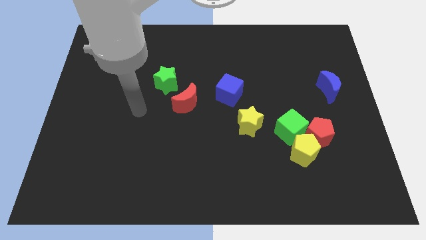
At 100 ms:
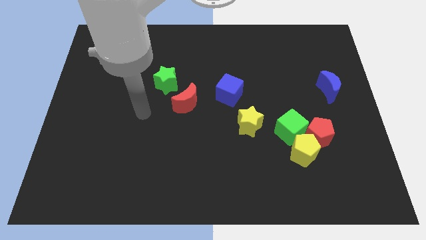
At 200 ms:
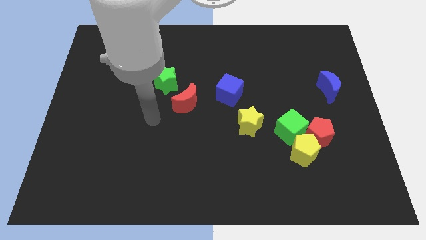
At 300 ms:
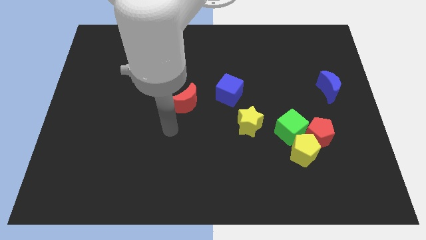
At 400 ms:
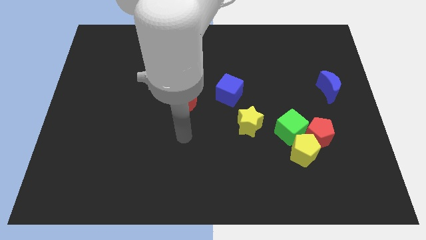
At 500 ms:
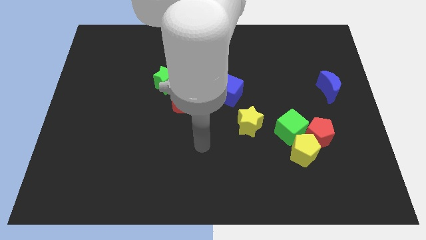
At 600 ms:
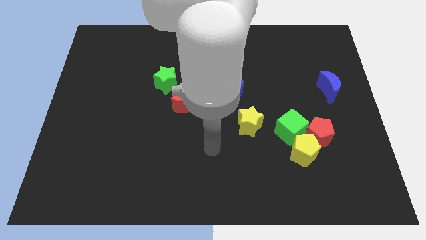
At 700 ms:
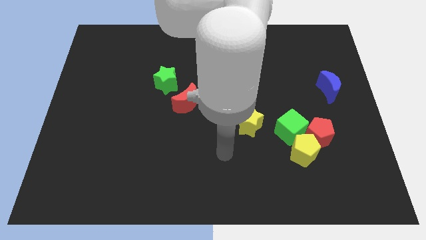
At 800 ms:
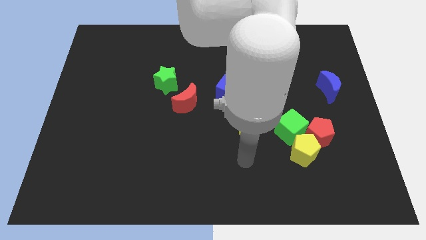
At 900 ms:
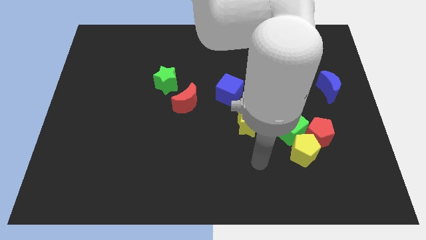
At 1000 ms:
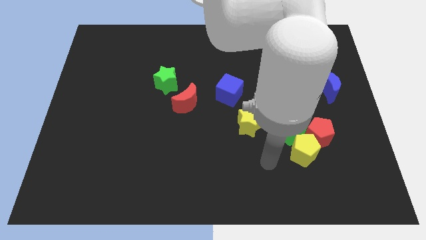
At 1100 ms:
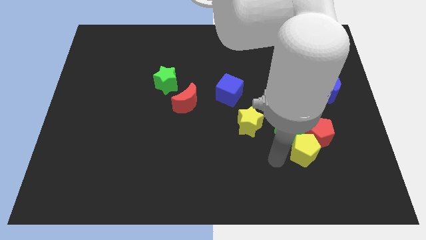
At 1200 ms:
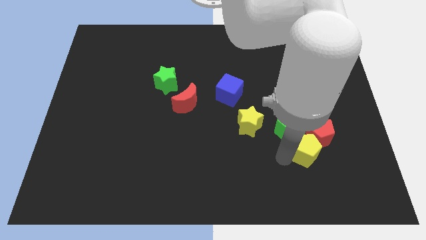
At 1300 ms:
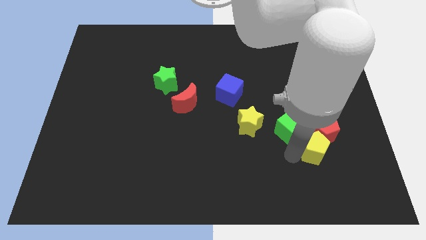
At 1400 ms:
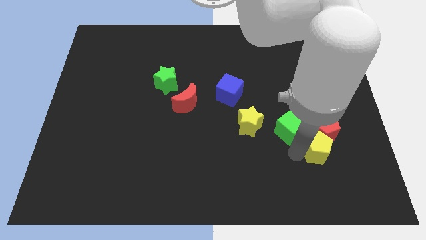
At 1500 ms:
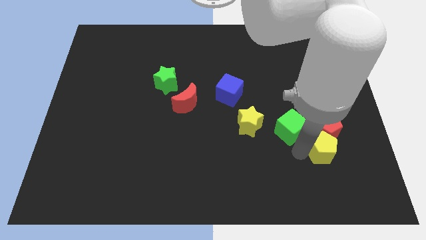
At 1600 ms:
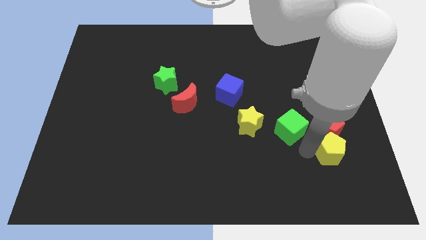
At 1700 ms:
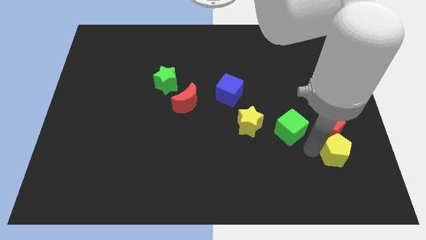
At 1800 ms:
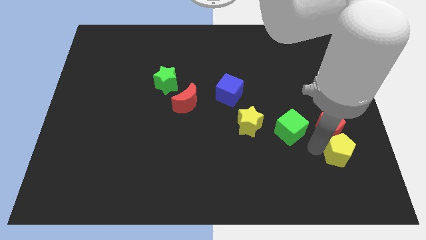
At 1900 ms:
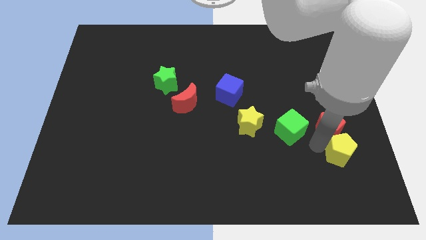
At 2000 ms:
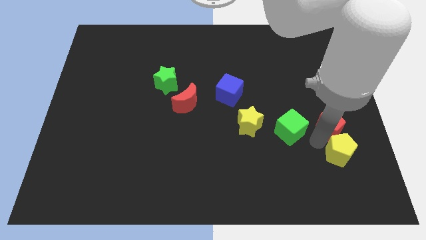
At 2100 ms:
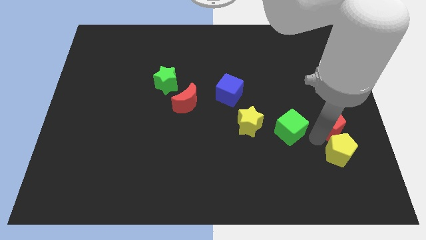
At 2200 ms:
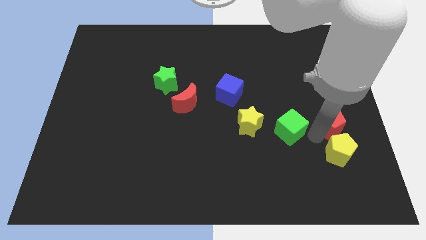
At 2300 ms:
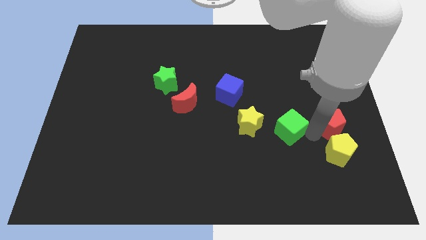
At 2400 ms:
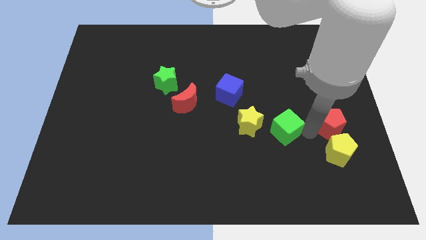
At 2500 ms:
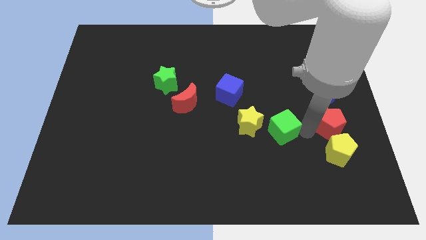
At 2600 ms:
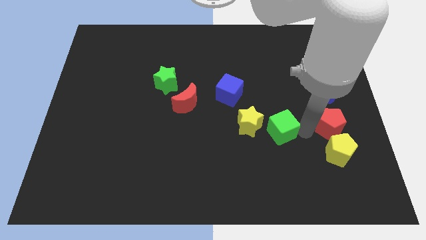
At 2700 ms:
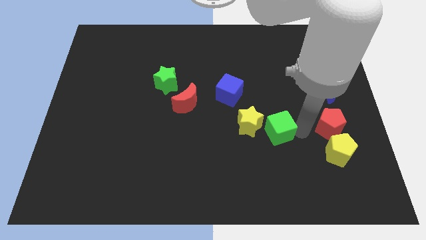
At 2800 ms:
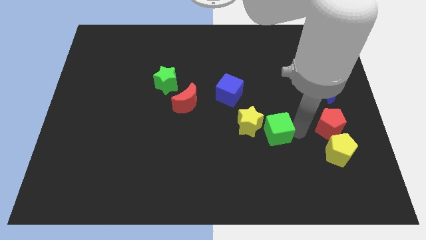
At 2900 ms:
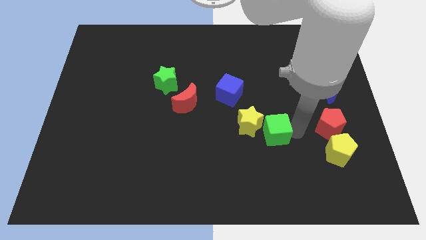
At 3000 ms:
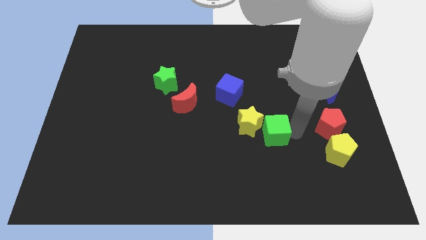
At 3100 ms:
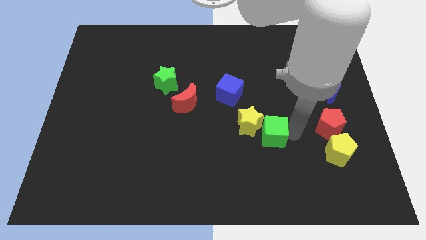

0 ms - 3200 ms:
move the green cube to the yellow star

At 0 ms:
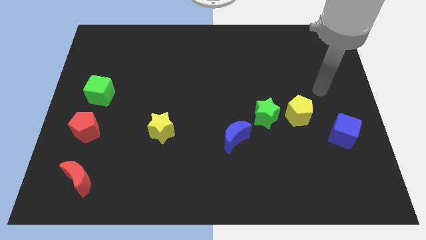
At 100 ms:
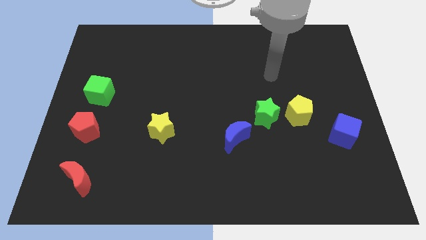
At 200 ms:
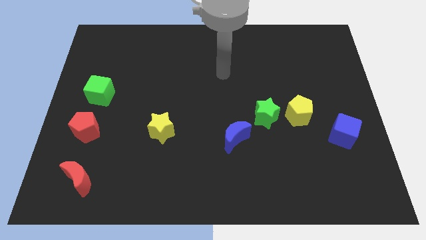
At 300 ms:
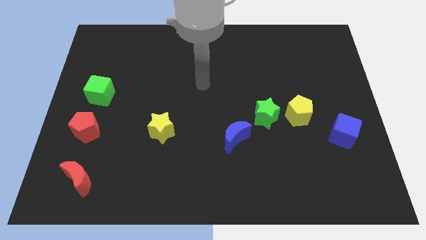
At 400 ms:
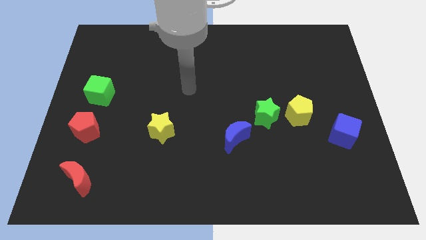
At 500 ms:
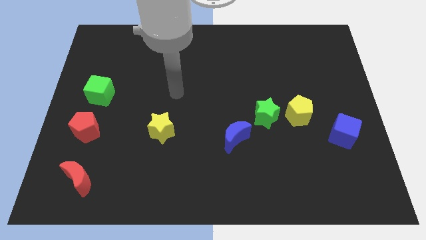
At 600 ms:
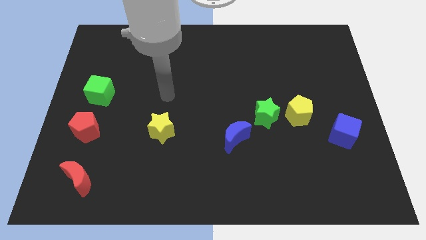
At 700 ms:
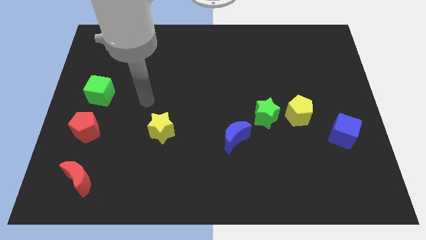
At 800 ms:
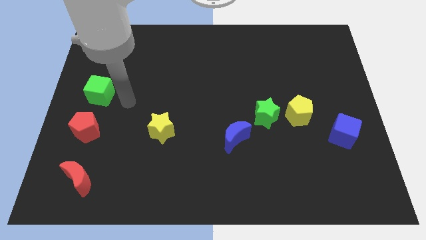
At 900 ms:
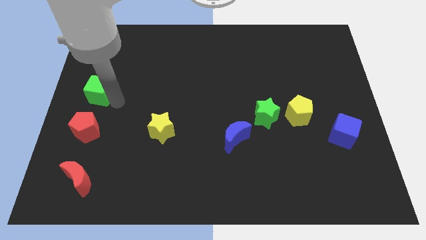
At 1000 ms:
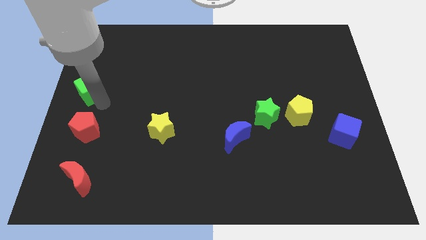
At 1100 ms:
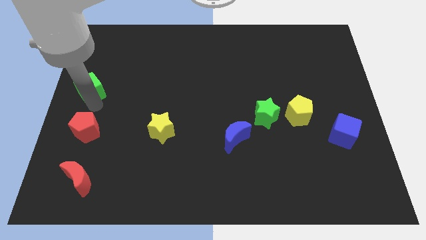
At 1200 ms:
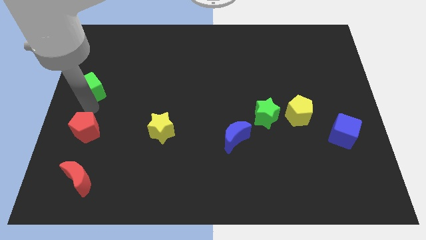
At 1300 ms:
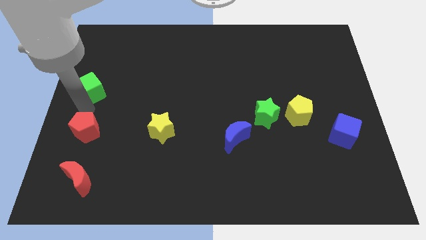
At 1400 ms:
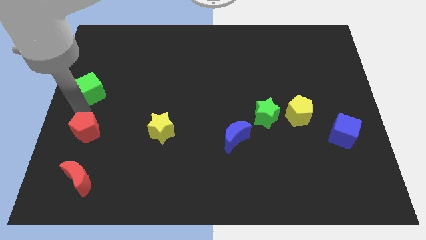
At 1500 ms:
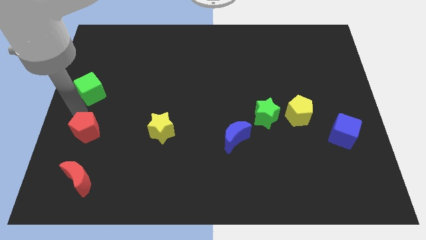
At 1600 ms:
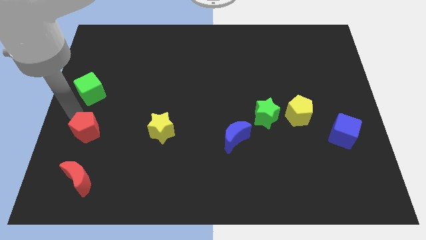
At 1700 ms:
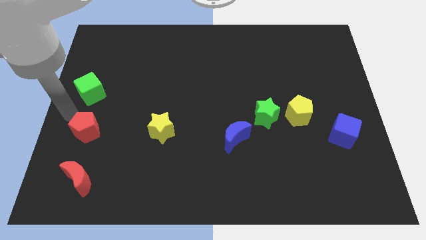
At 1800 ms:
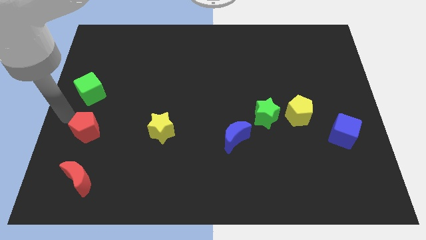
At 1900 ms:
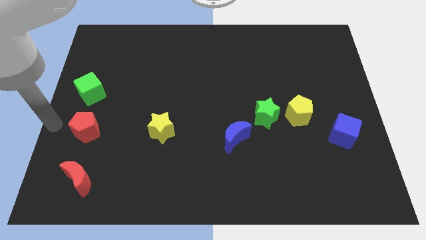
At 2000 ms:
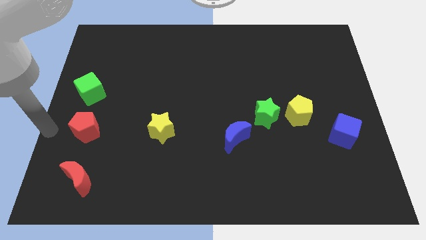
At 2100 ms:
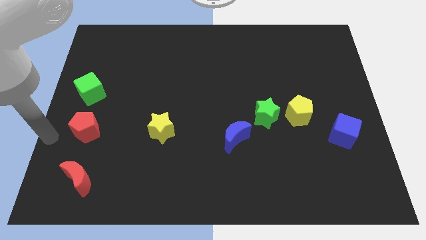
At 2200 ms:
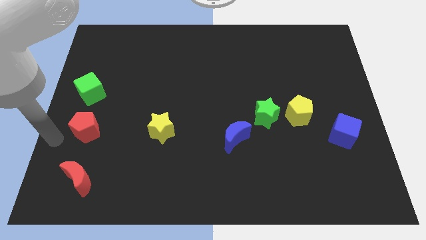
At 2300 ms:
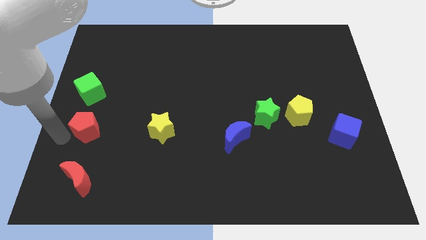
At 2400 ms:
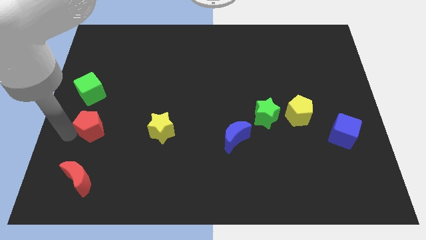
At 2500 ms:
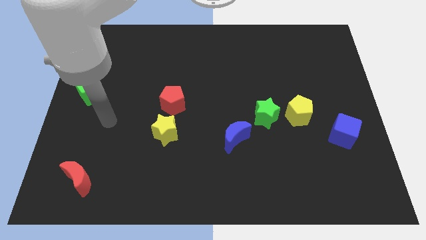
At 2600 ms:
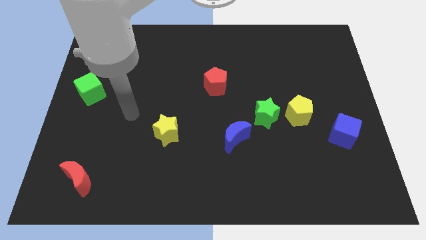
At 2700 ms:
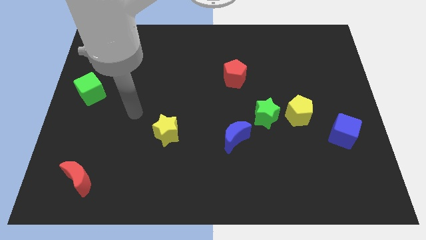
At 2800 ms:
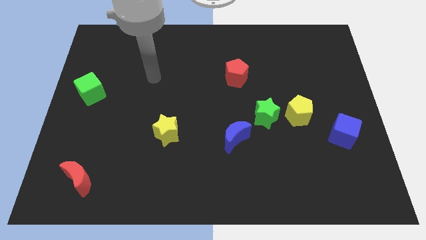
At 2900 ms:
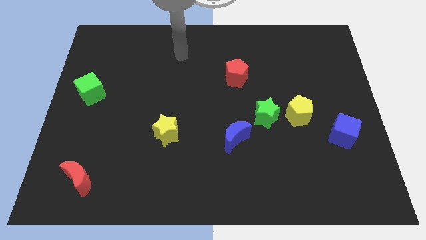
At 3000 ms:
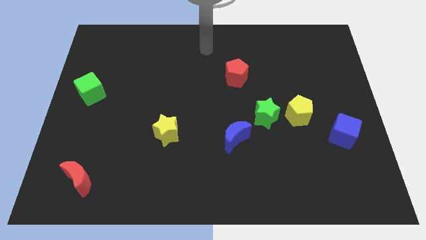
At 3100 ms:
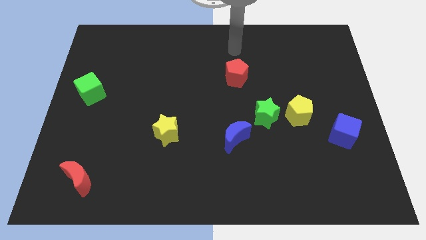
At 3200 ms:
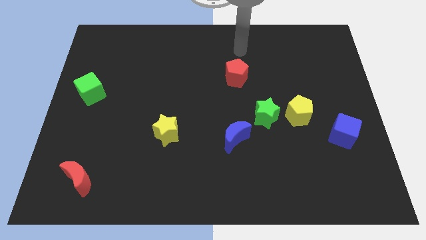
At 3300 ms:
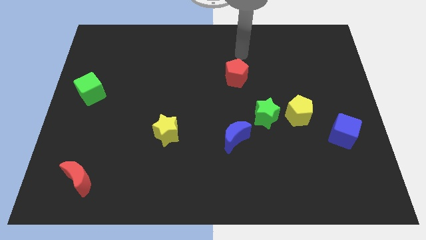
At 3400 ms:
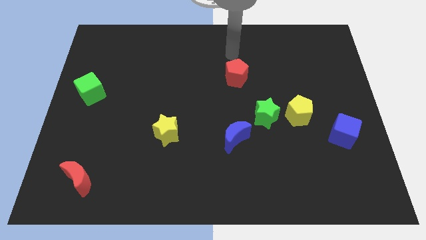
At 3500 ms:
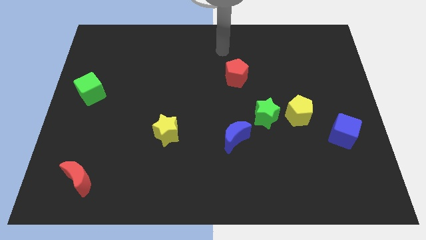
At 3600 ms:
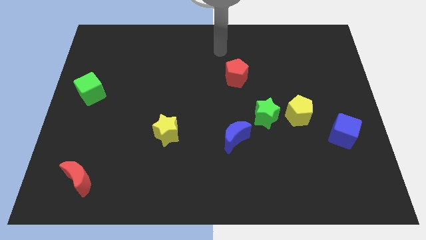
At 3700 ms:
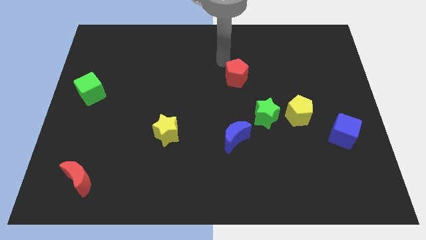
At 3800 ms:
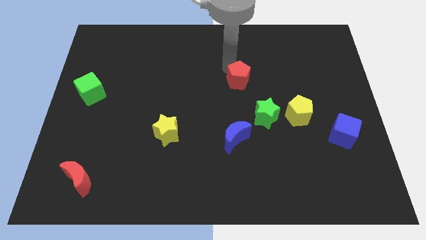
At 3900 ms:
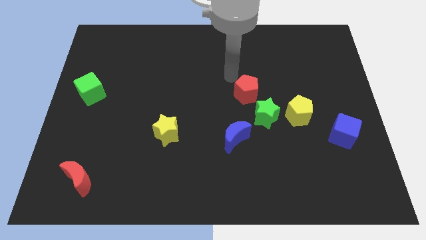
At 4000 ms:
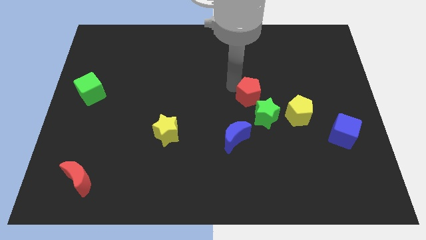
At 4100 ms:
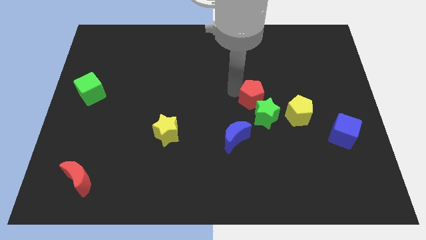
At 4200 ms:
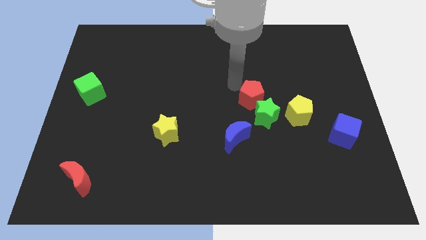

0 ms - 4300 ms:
put the red pentagon close to the green star

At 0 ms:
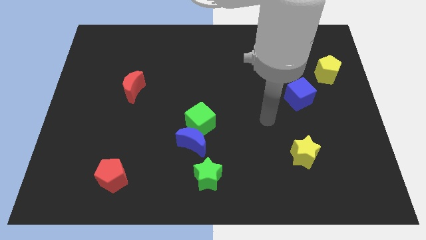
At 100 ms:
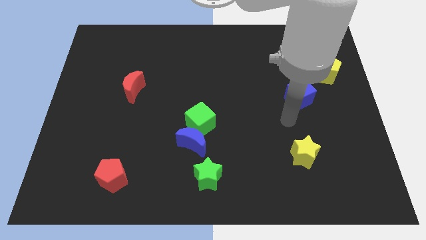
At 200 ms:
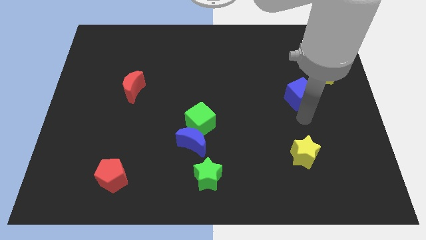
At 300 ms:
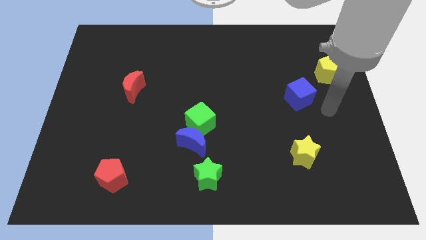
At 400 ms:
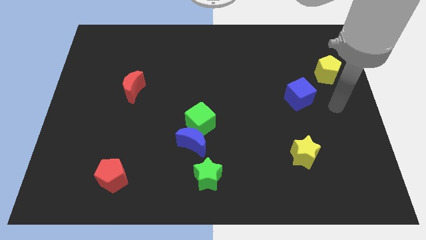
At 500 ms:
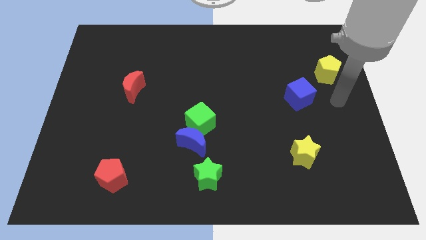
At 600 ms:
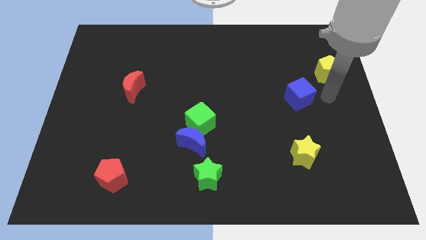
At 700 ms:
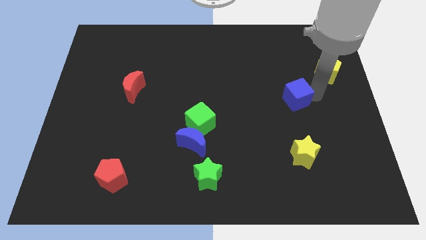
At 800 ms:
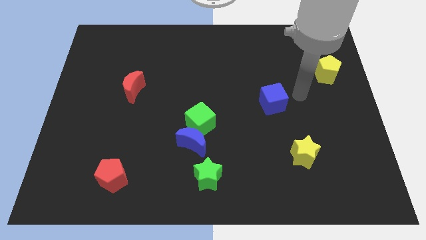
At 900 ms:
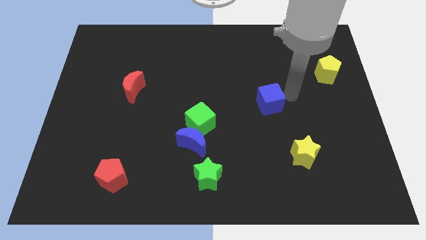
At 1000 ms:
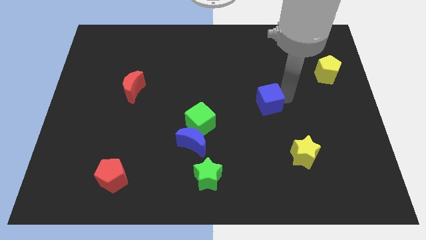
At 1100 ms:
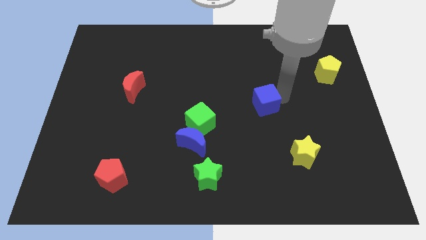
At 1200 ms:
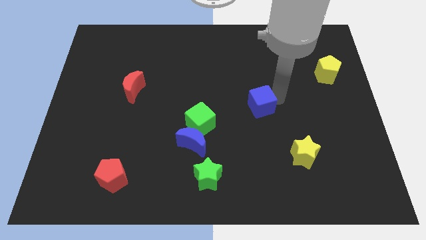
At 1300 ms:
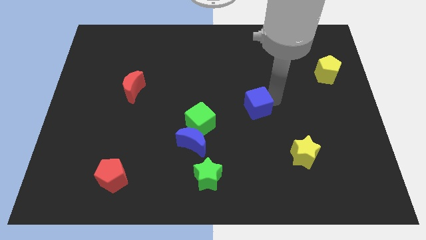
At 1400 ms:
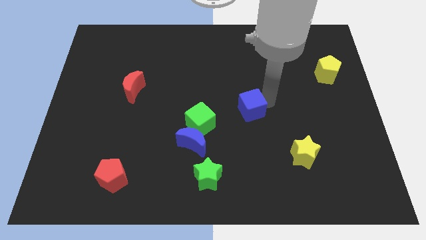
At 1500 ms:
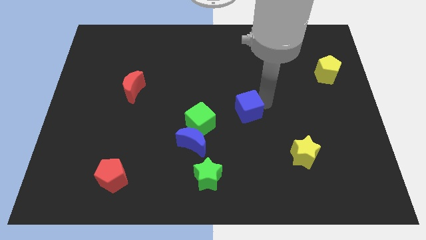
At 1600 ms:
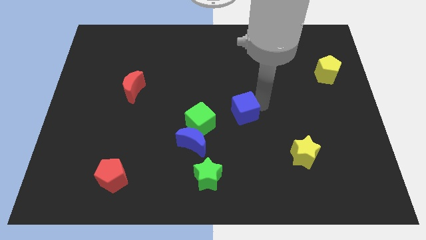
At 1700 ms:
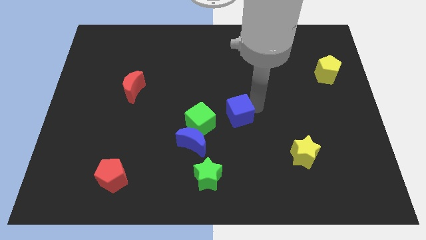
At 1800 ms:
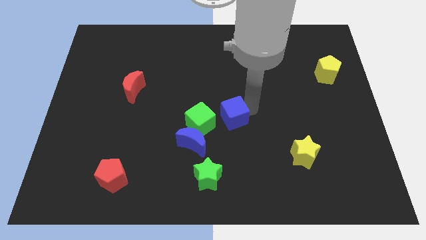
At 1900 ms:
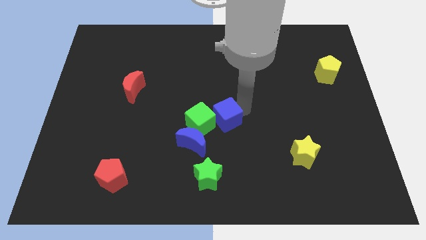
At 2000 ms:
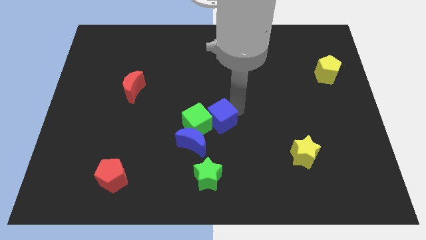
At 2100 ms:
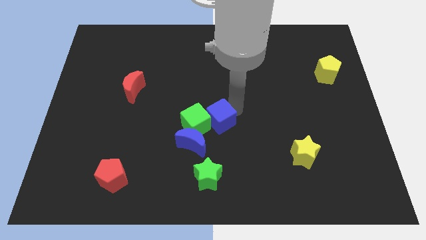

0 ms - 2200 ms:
put the blue cube close to the green cube
